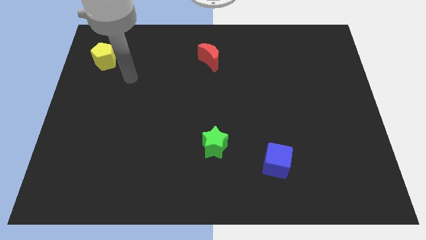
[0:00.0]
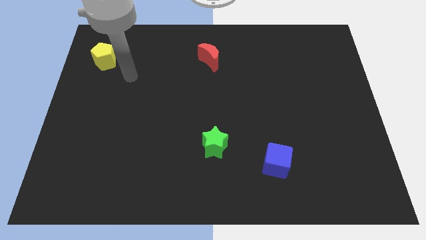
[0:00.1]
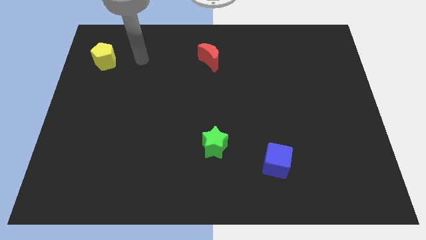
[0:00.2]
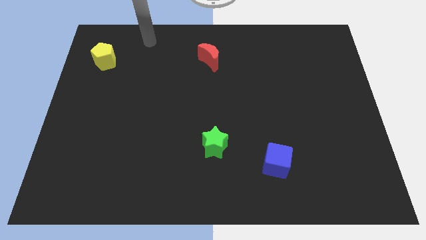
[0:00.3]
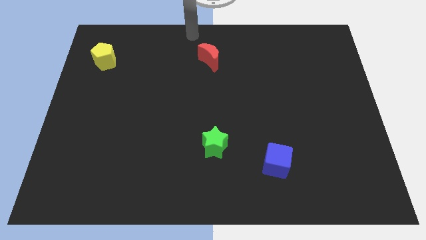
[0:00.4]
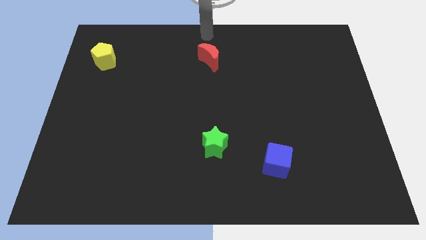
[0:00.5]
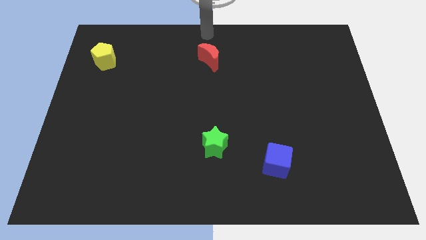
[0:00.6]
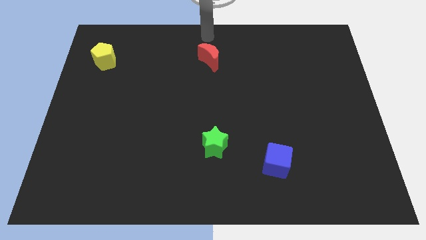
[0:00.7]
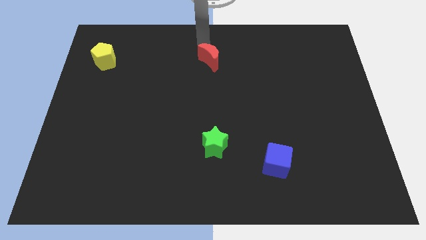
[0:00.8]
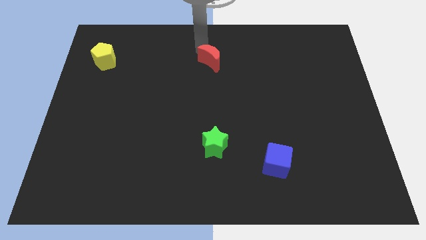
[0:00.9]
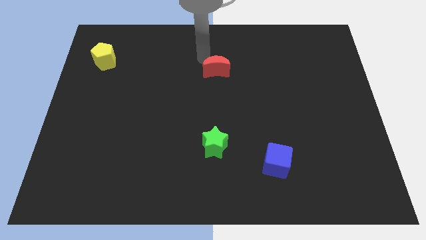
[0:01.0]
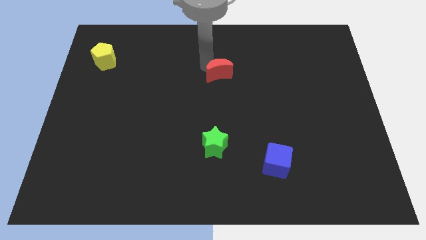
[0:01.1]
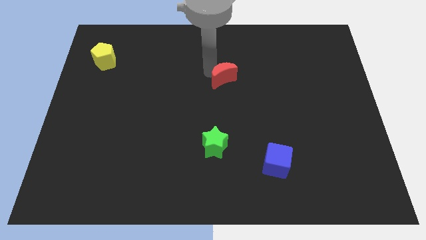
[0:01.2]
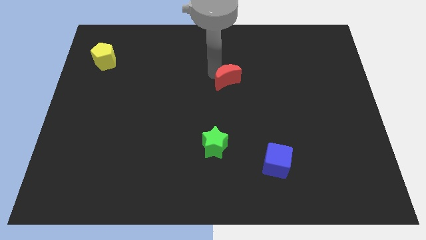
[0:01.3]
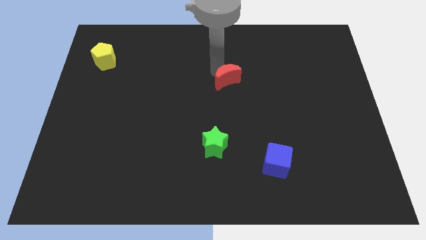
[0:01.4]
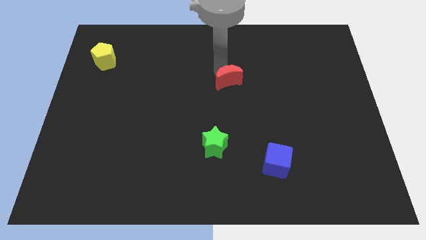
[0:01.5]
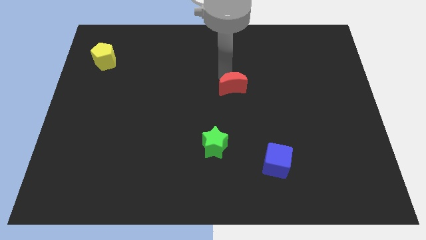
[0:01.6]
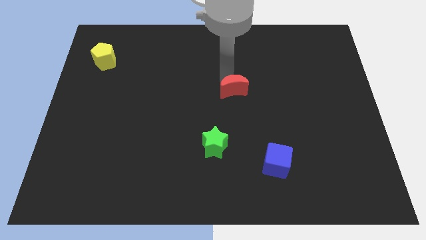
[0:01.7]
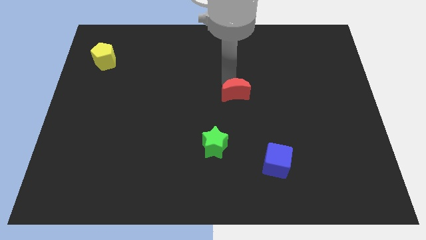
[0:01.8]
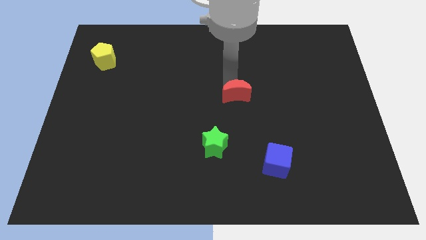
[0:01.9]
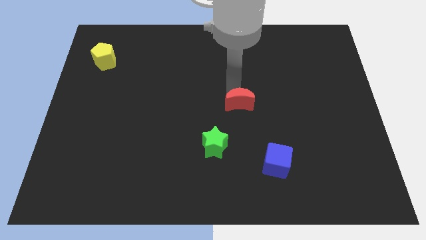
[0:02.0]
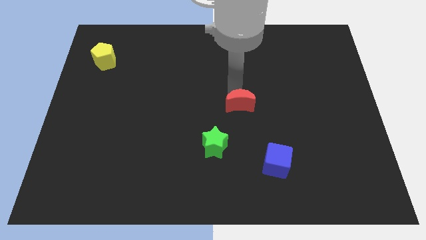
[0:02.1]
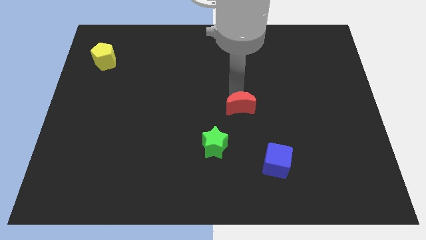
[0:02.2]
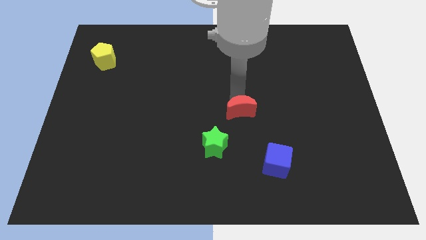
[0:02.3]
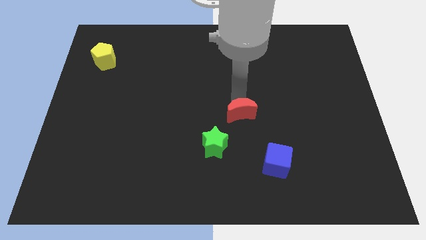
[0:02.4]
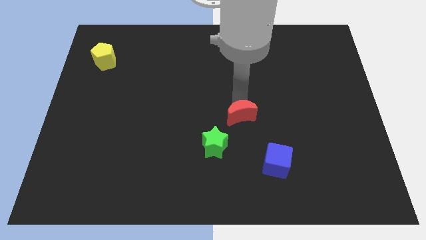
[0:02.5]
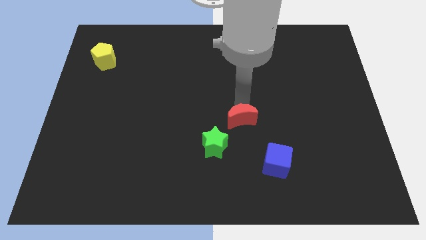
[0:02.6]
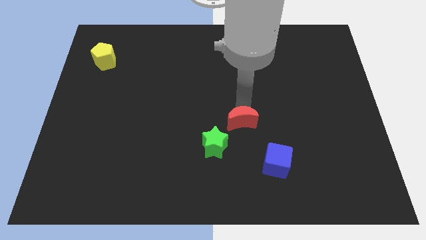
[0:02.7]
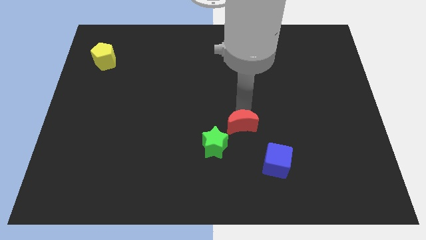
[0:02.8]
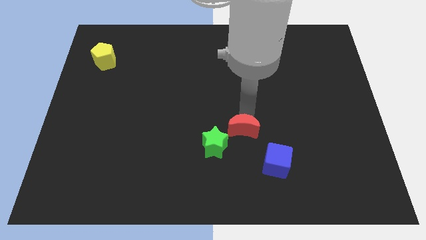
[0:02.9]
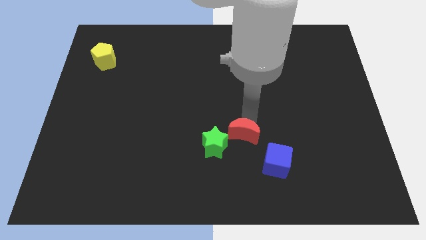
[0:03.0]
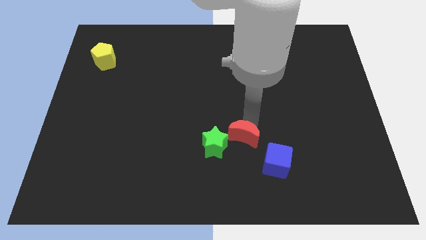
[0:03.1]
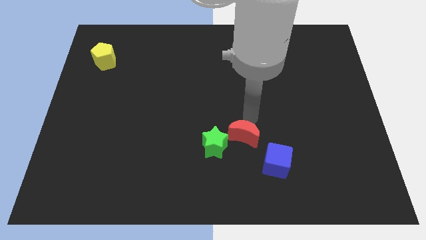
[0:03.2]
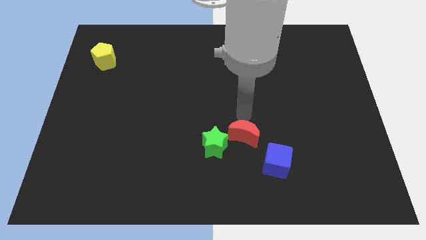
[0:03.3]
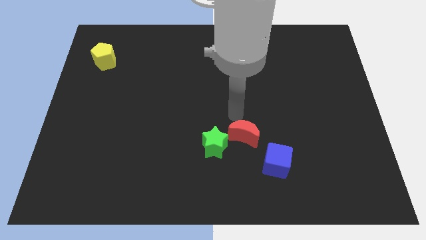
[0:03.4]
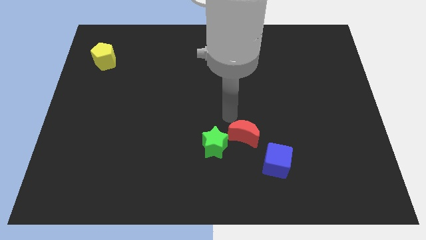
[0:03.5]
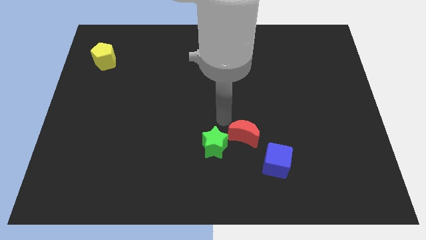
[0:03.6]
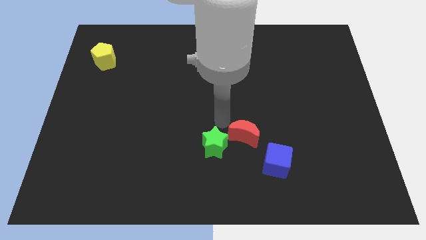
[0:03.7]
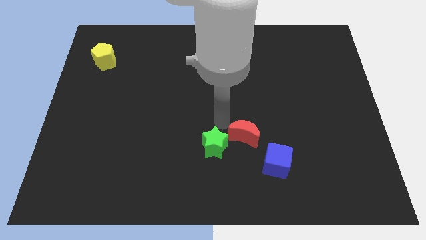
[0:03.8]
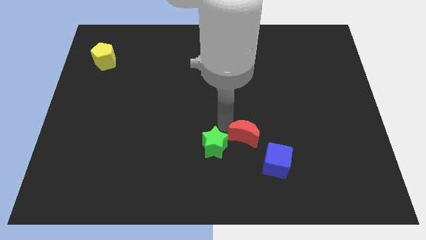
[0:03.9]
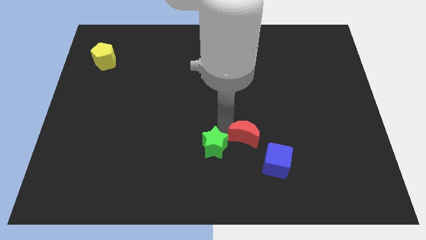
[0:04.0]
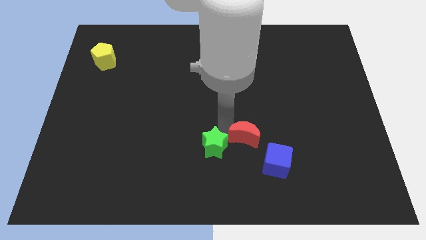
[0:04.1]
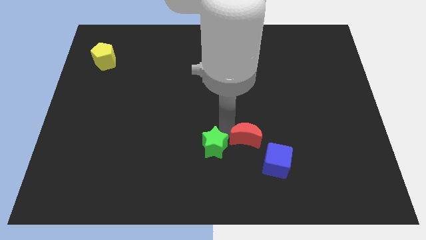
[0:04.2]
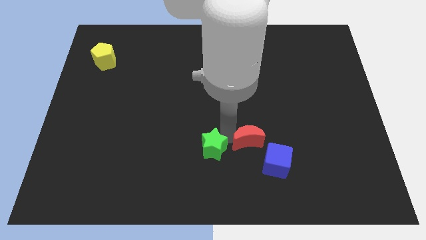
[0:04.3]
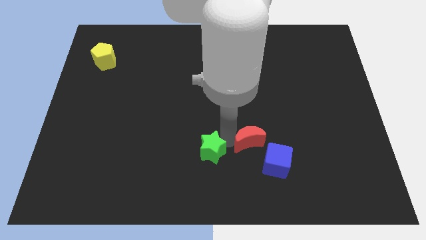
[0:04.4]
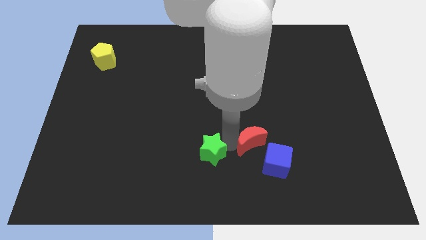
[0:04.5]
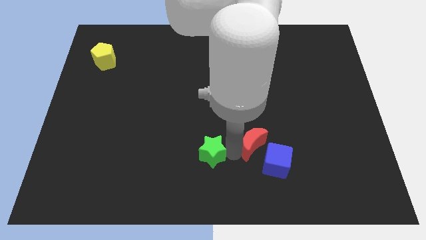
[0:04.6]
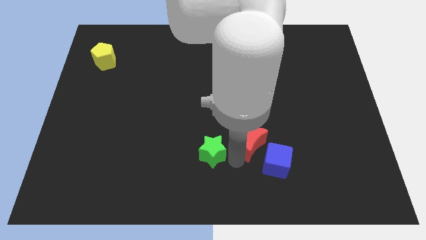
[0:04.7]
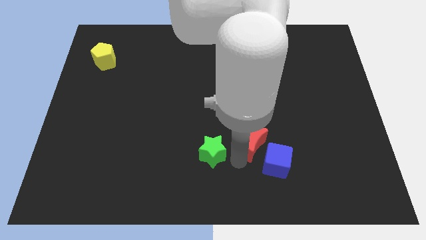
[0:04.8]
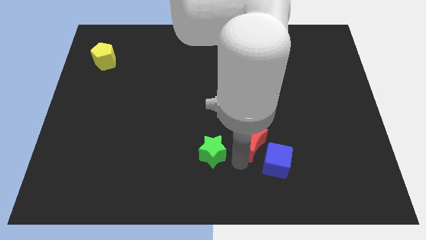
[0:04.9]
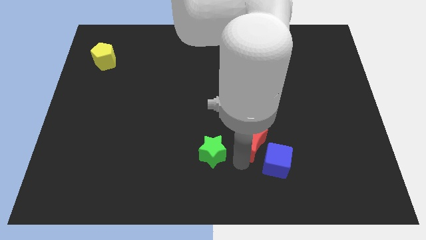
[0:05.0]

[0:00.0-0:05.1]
move the moon close to the blue block

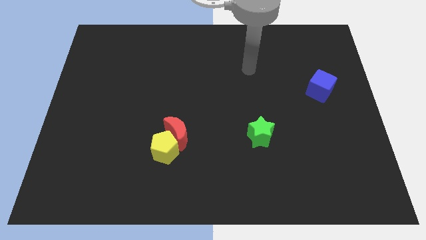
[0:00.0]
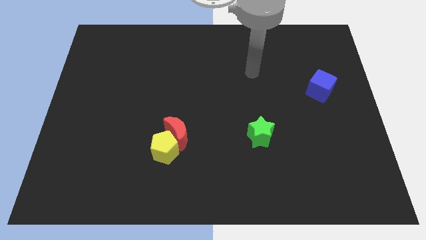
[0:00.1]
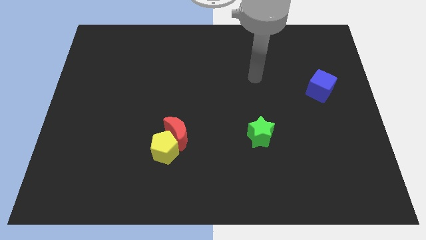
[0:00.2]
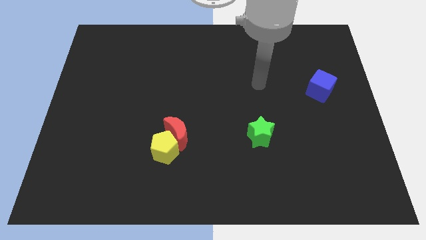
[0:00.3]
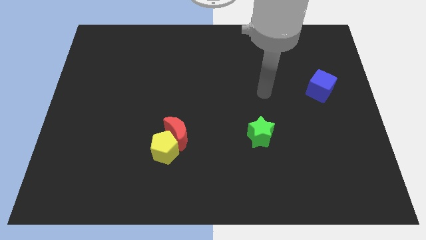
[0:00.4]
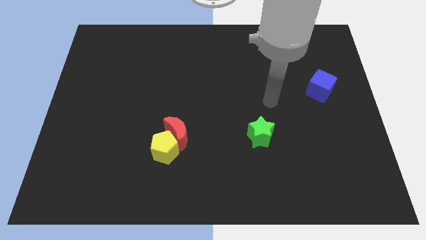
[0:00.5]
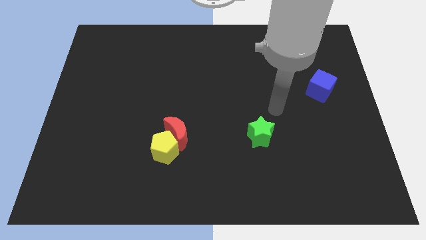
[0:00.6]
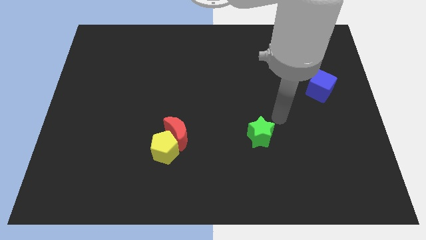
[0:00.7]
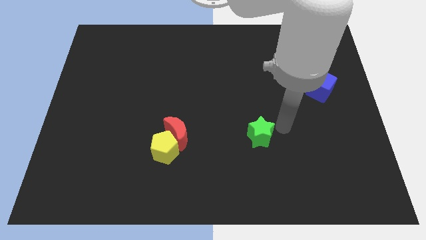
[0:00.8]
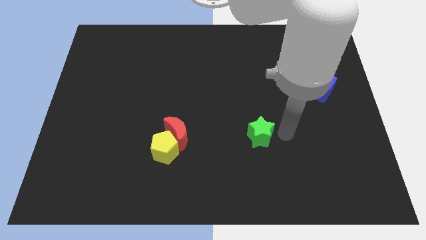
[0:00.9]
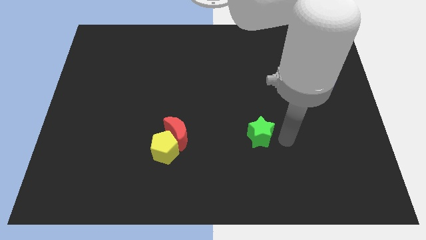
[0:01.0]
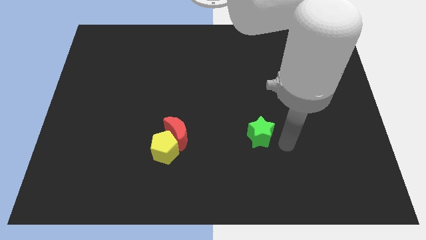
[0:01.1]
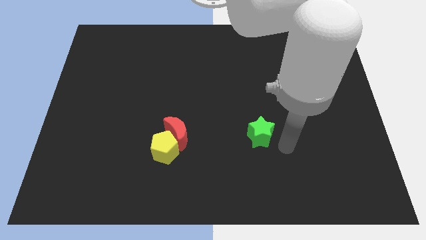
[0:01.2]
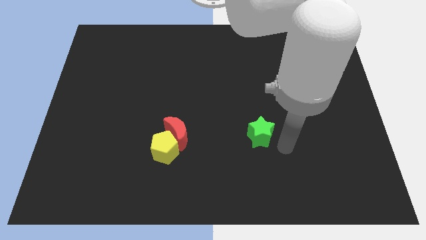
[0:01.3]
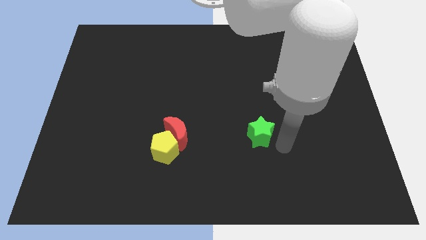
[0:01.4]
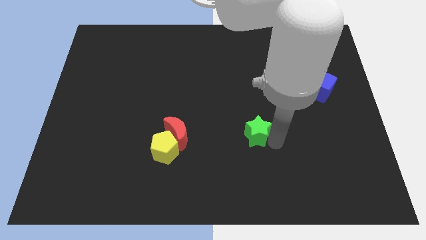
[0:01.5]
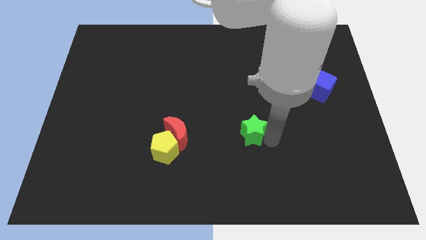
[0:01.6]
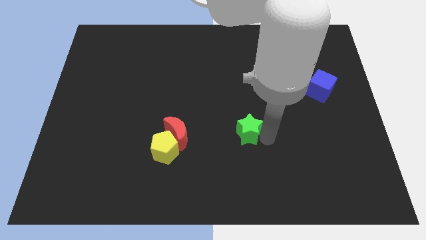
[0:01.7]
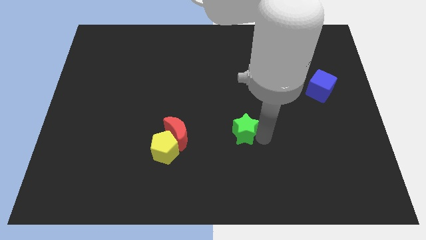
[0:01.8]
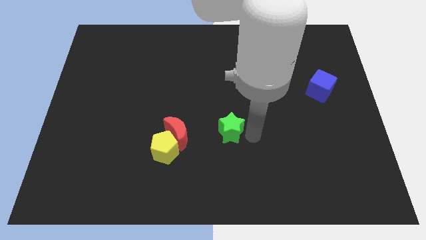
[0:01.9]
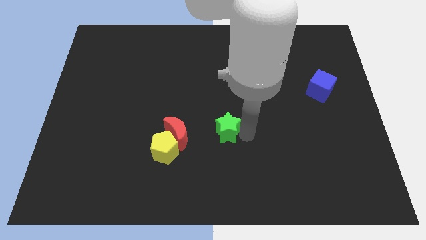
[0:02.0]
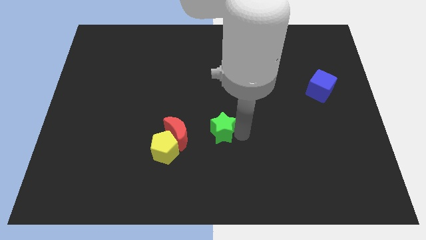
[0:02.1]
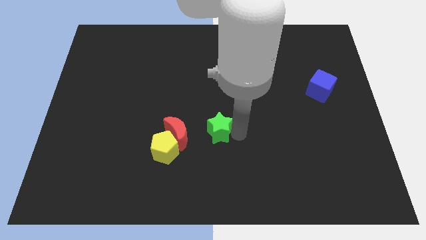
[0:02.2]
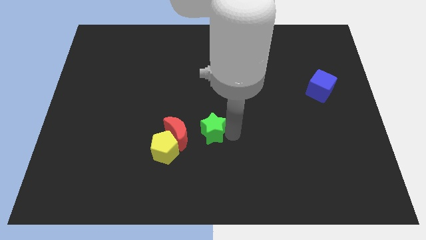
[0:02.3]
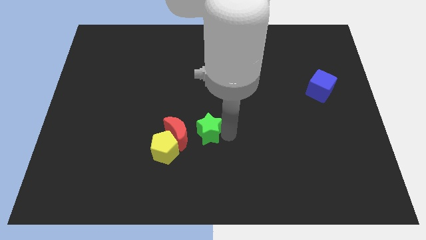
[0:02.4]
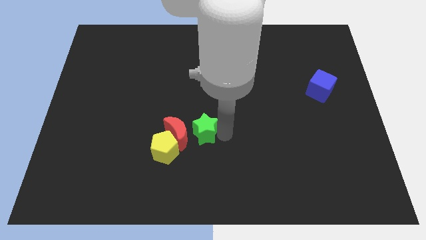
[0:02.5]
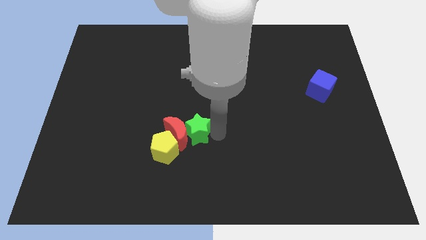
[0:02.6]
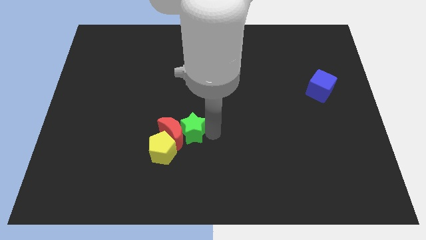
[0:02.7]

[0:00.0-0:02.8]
push the star towards the red moon

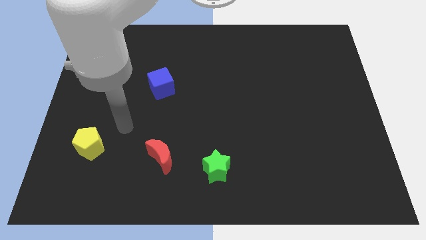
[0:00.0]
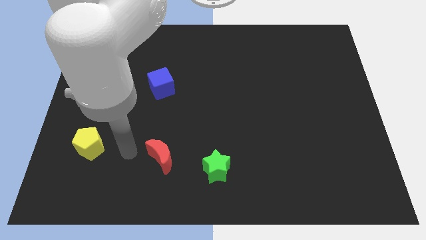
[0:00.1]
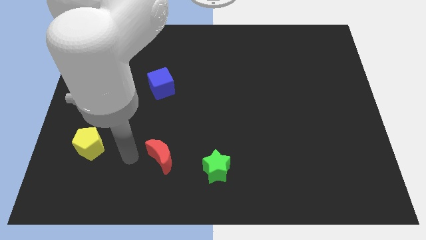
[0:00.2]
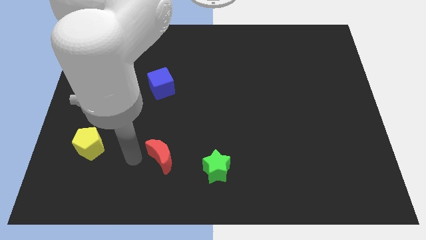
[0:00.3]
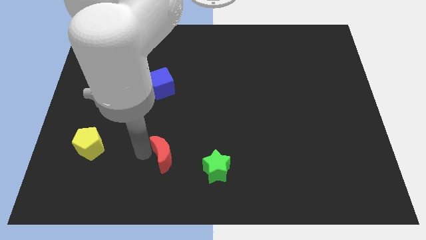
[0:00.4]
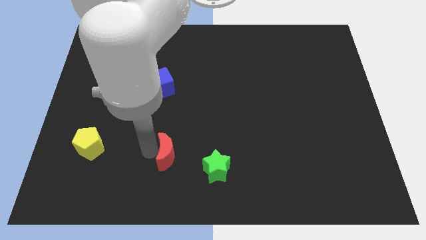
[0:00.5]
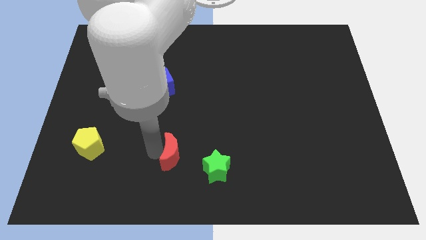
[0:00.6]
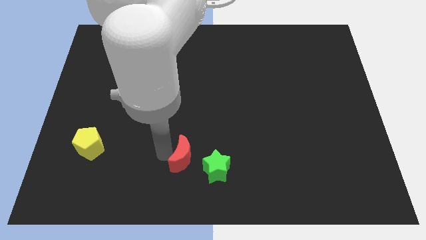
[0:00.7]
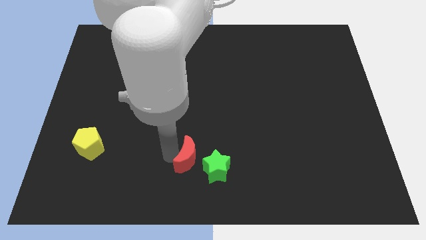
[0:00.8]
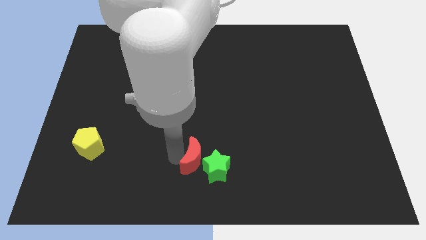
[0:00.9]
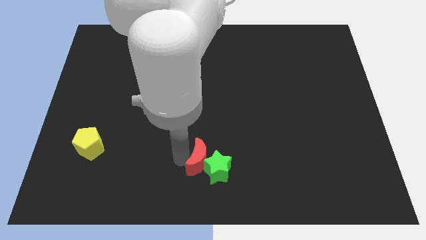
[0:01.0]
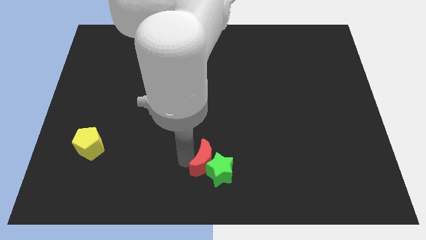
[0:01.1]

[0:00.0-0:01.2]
push the moon close to the green block
